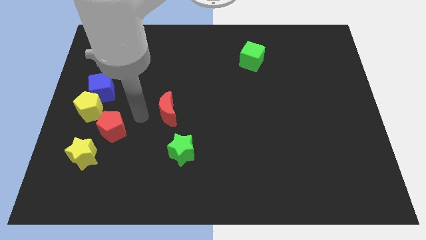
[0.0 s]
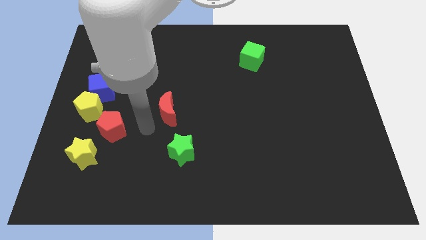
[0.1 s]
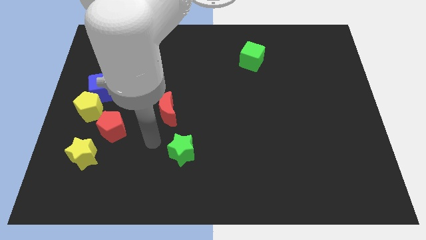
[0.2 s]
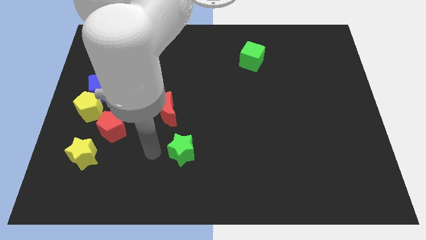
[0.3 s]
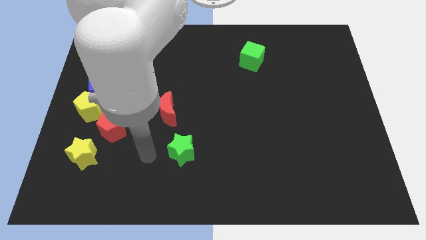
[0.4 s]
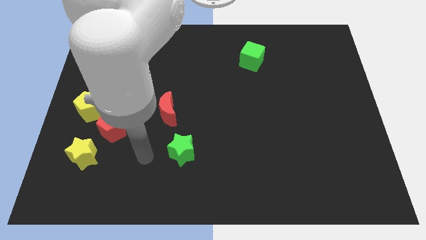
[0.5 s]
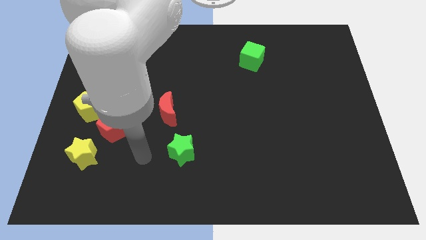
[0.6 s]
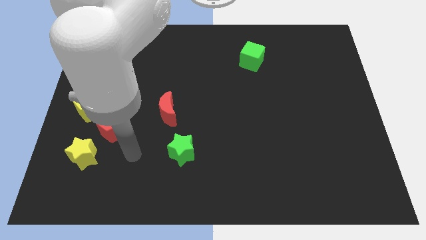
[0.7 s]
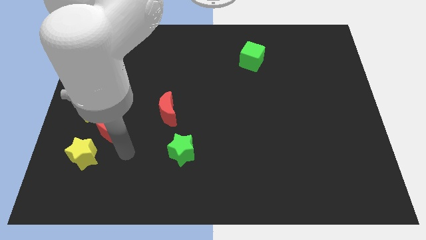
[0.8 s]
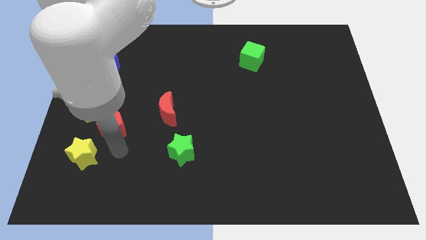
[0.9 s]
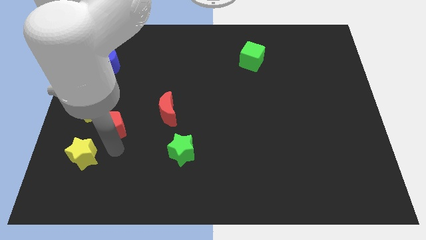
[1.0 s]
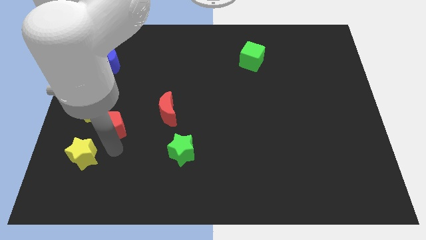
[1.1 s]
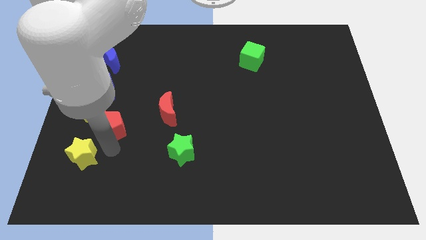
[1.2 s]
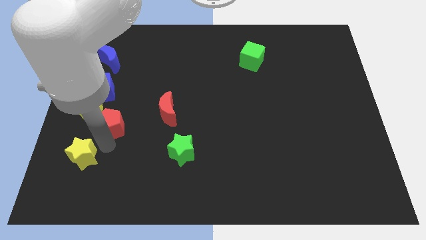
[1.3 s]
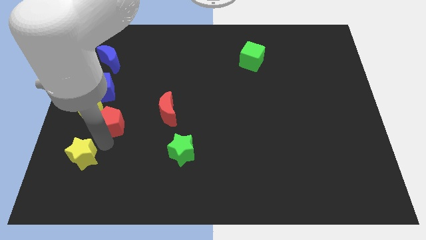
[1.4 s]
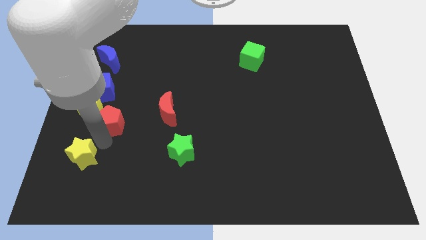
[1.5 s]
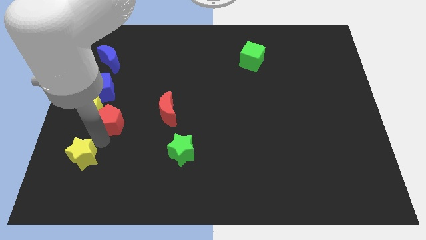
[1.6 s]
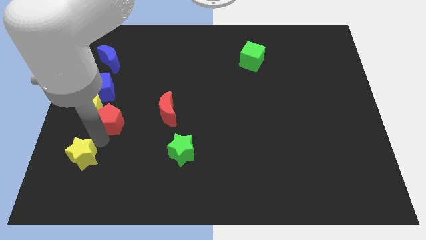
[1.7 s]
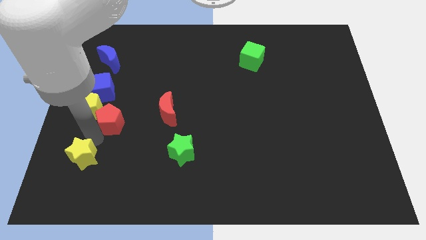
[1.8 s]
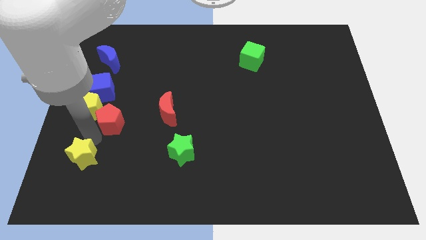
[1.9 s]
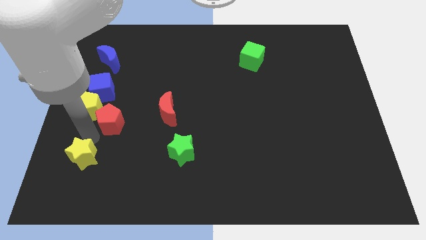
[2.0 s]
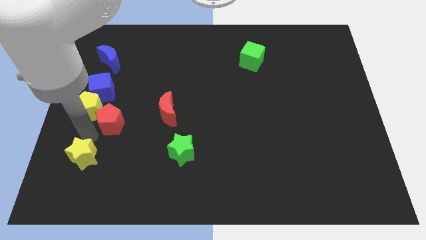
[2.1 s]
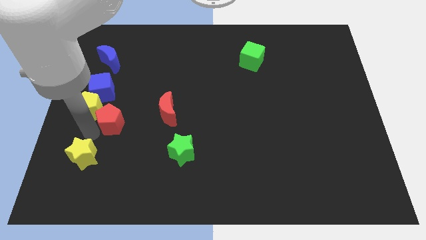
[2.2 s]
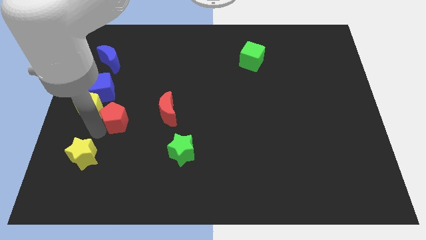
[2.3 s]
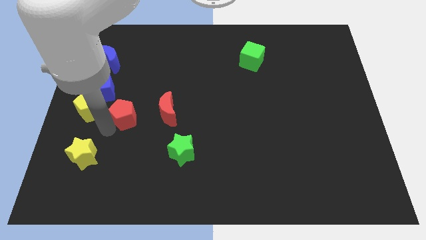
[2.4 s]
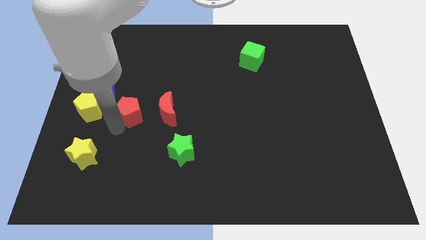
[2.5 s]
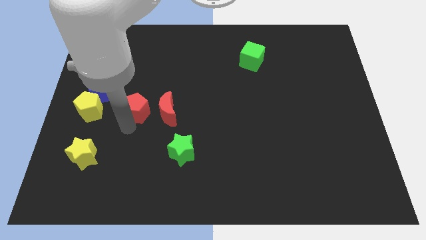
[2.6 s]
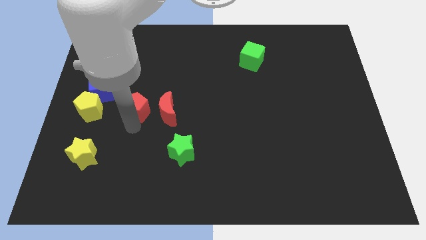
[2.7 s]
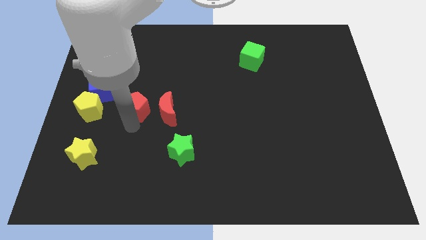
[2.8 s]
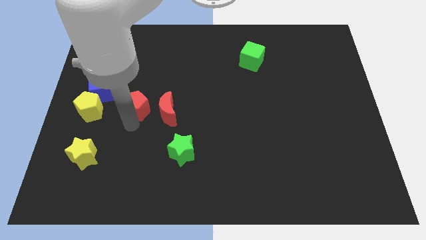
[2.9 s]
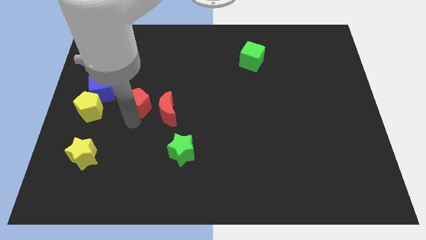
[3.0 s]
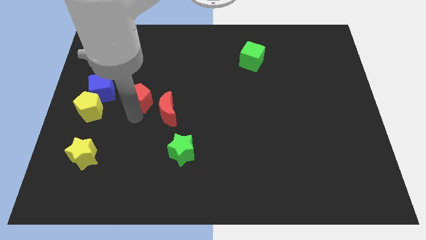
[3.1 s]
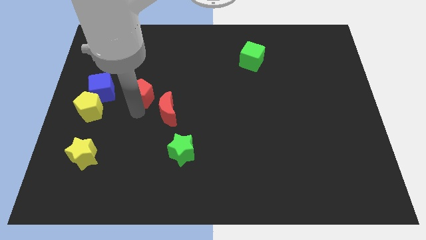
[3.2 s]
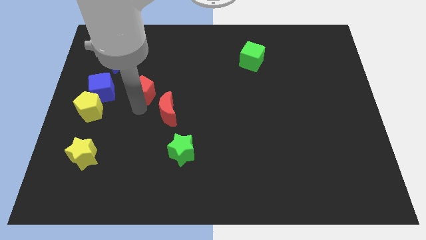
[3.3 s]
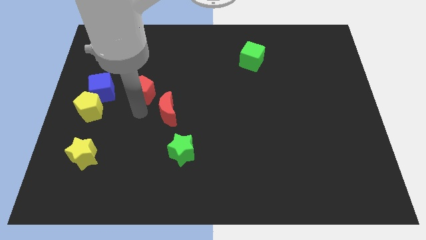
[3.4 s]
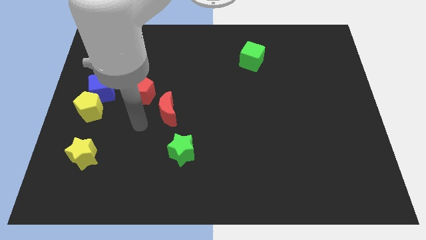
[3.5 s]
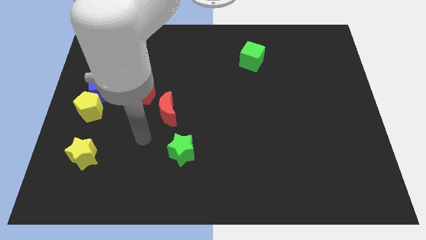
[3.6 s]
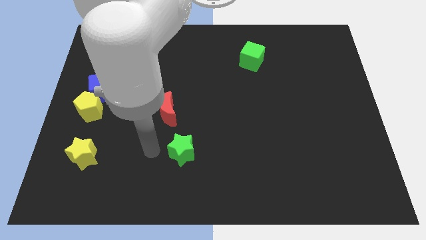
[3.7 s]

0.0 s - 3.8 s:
place the red pentagon parallel right to the blue cube

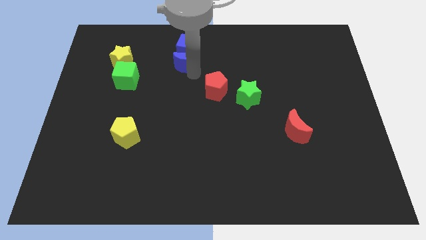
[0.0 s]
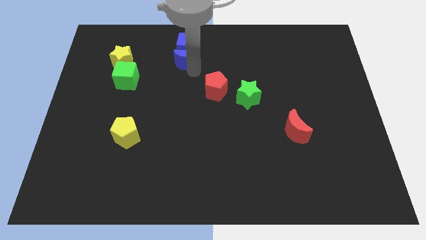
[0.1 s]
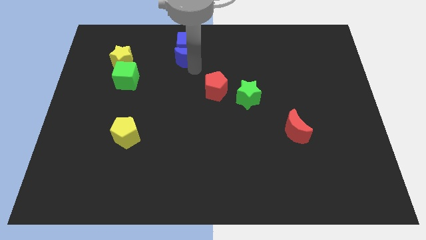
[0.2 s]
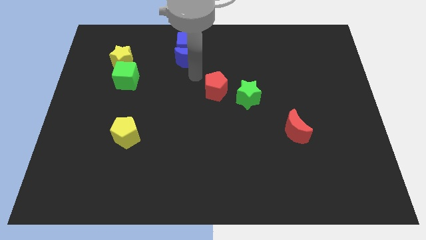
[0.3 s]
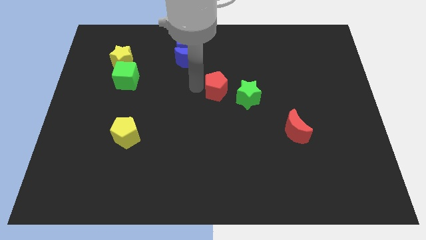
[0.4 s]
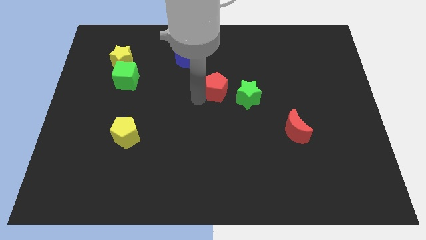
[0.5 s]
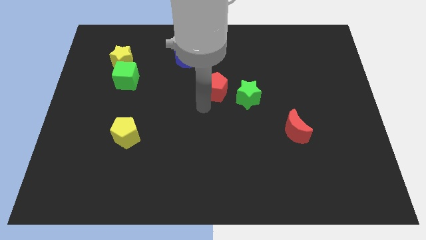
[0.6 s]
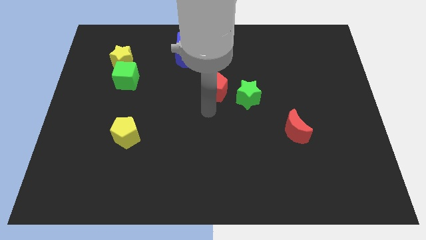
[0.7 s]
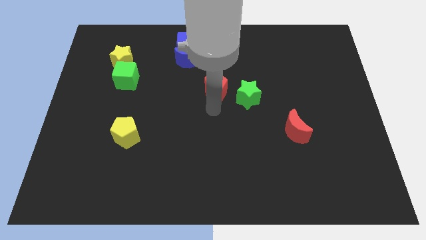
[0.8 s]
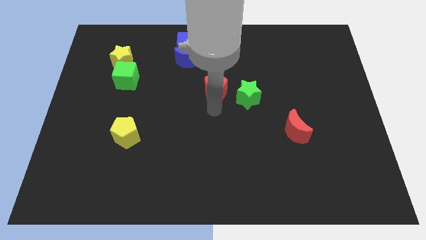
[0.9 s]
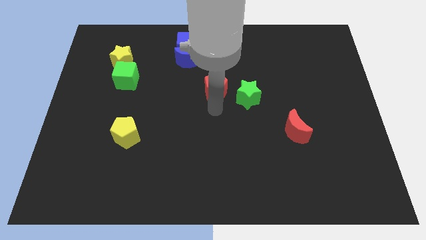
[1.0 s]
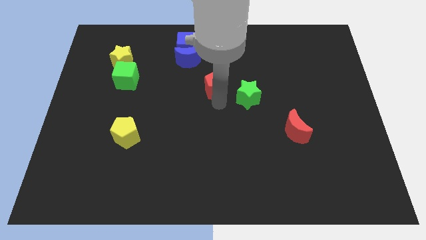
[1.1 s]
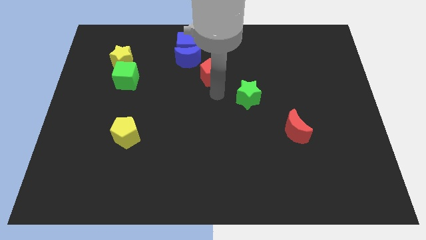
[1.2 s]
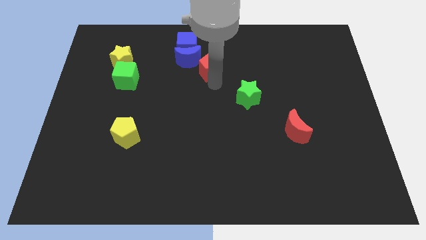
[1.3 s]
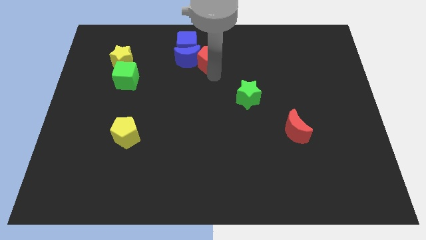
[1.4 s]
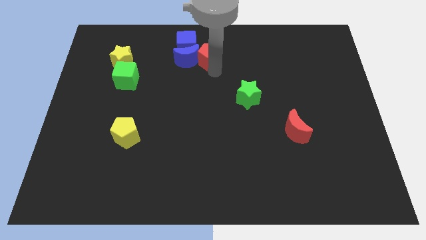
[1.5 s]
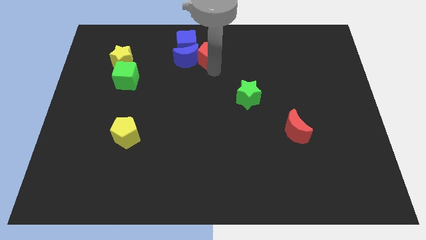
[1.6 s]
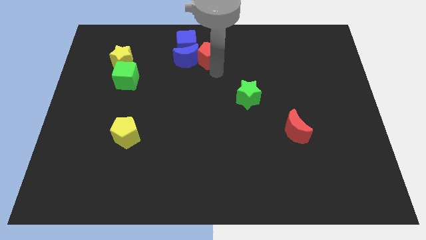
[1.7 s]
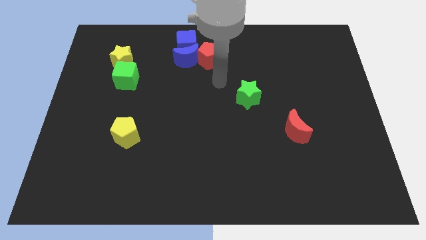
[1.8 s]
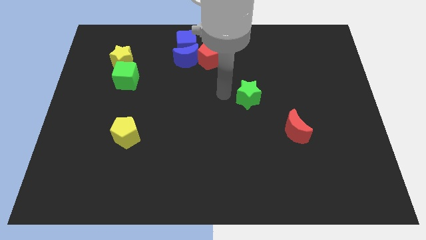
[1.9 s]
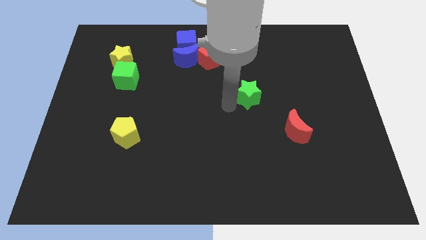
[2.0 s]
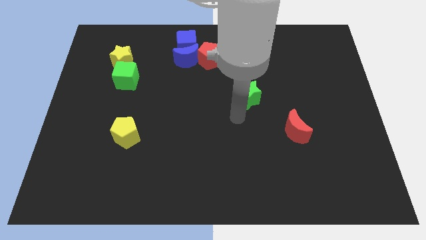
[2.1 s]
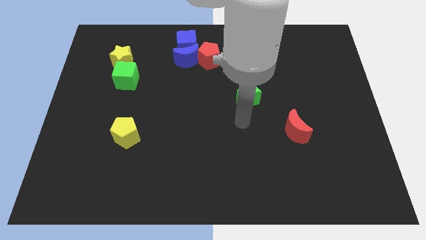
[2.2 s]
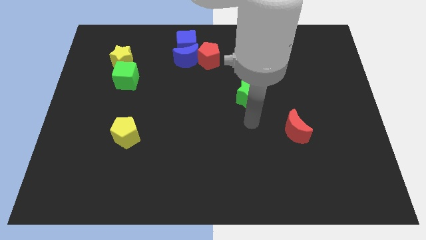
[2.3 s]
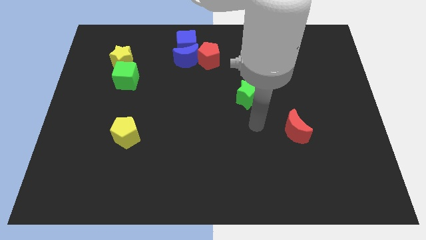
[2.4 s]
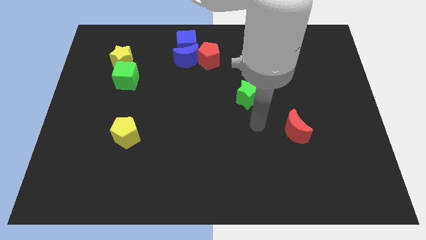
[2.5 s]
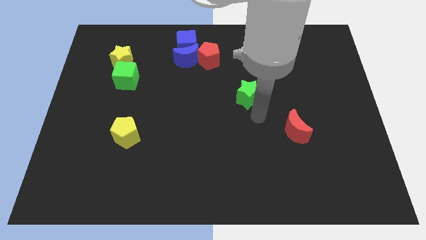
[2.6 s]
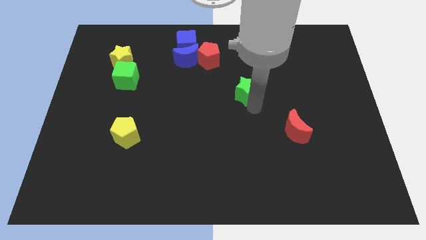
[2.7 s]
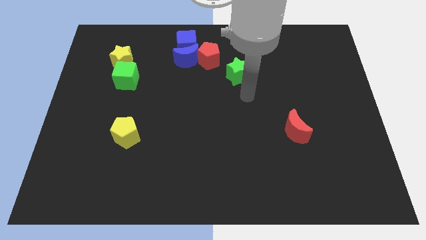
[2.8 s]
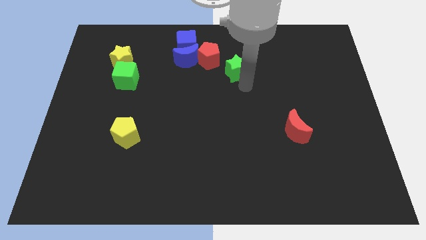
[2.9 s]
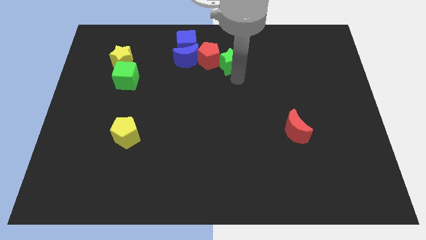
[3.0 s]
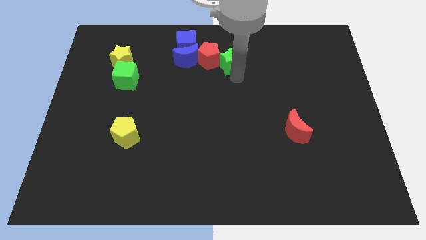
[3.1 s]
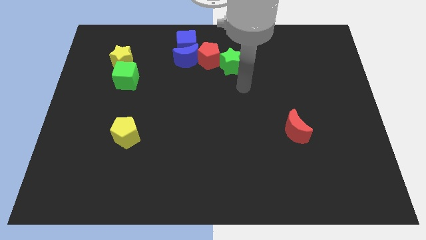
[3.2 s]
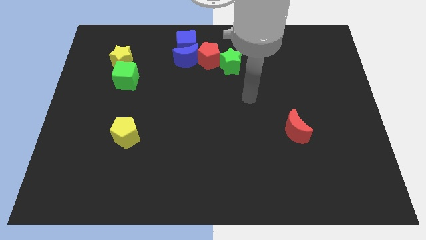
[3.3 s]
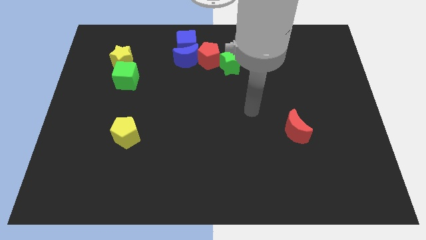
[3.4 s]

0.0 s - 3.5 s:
move the red pentagon and green star towards blue blocks

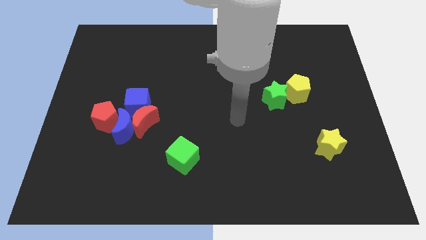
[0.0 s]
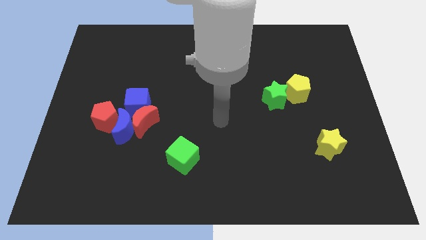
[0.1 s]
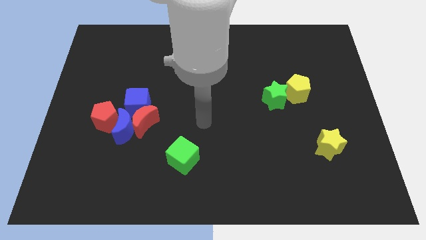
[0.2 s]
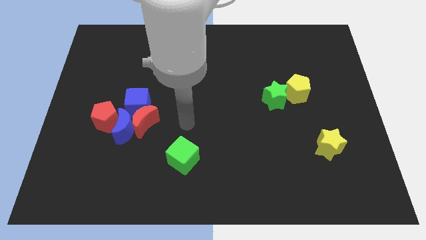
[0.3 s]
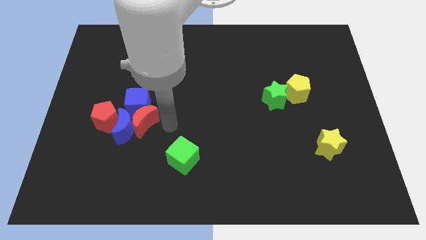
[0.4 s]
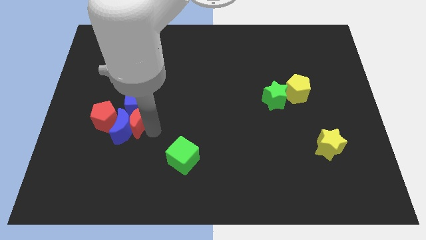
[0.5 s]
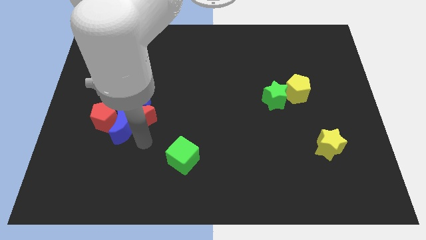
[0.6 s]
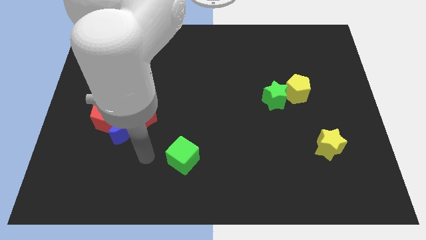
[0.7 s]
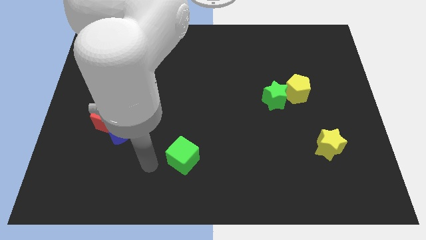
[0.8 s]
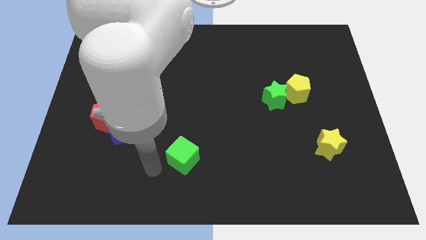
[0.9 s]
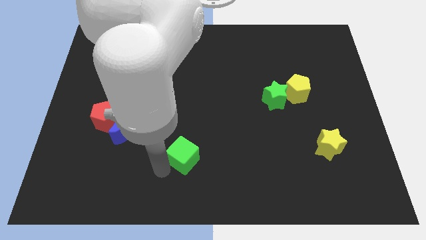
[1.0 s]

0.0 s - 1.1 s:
place the hand left to green cube

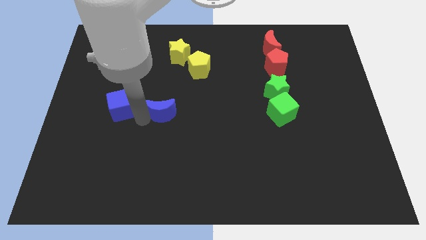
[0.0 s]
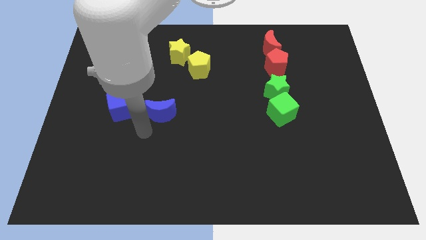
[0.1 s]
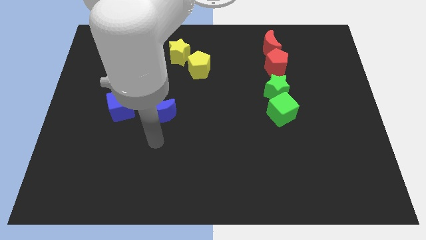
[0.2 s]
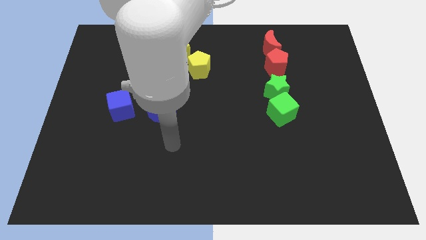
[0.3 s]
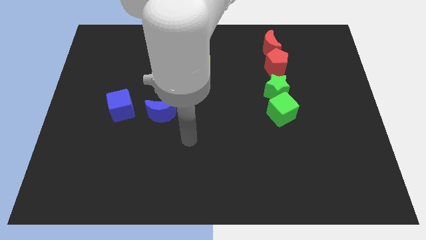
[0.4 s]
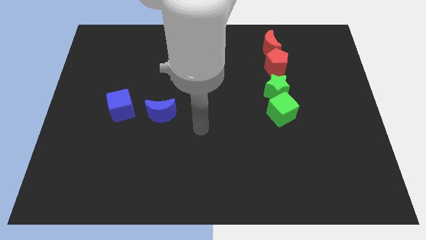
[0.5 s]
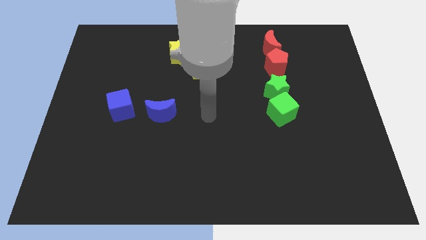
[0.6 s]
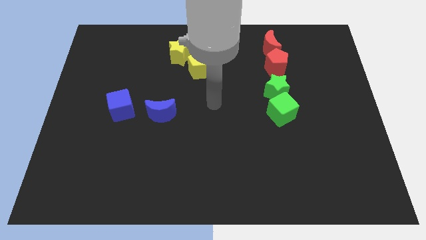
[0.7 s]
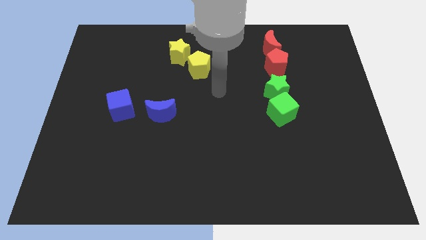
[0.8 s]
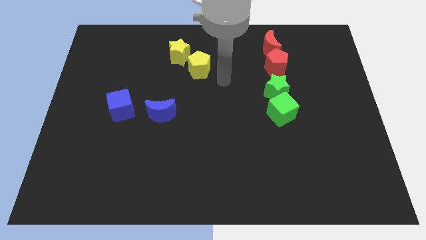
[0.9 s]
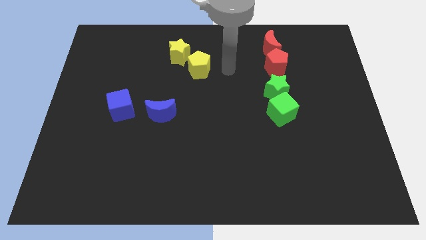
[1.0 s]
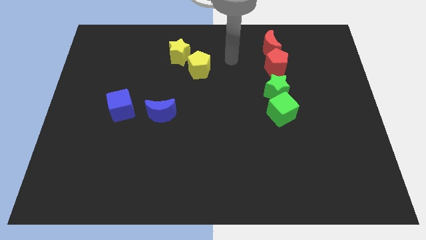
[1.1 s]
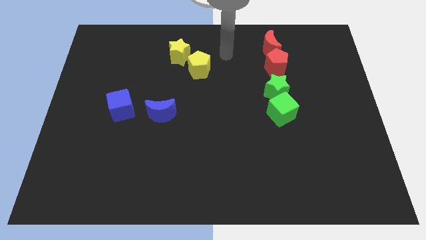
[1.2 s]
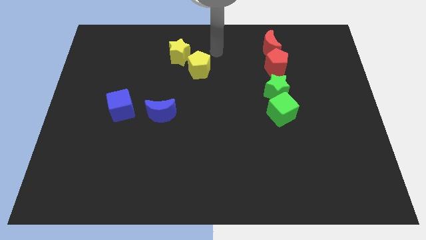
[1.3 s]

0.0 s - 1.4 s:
move your arm away from the blue moon
